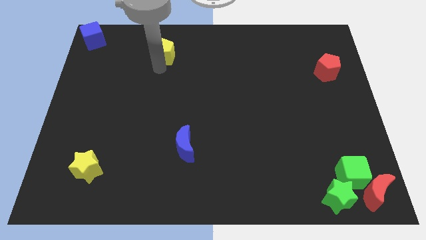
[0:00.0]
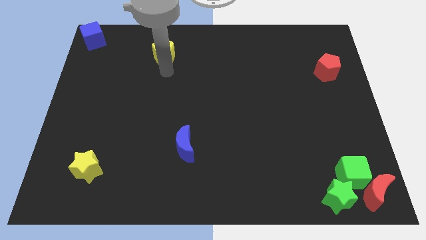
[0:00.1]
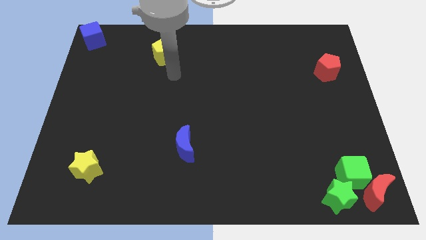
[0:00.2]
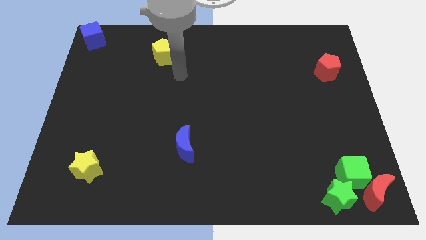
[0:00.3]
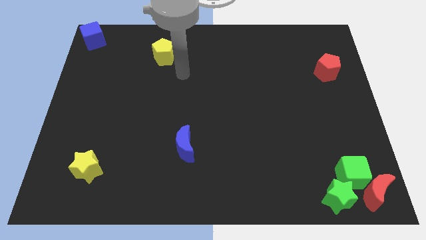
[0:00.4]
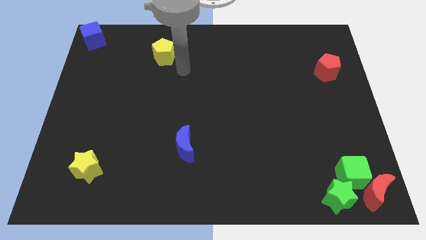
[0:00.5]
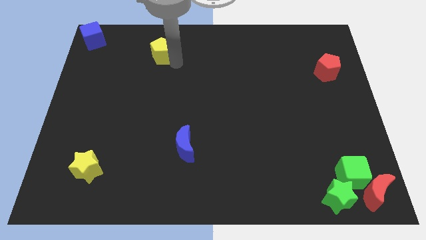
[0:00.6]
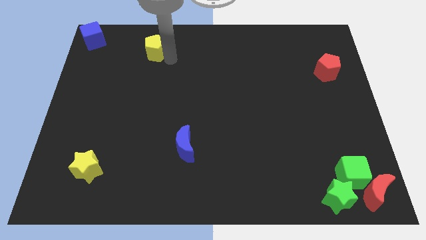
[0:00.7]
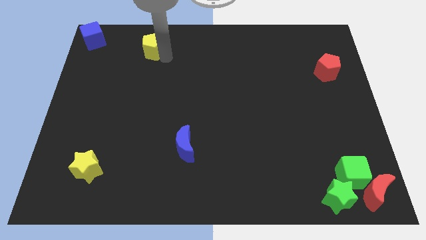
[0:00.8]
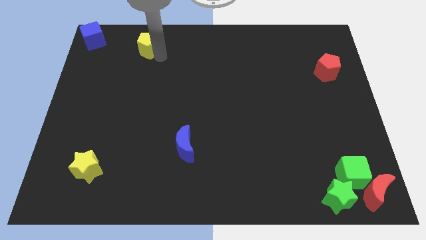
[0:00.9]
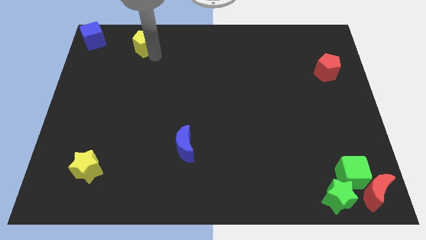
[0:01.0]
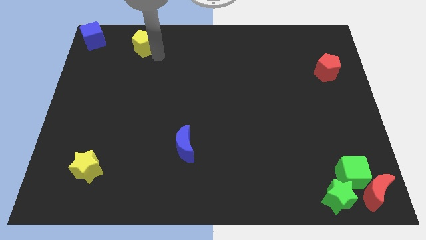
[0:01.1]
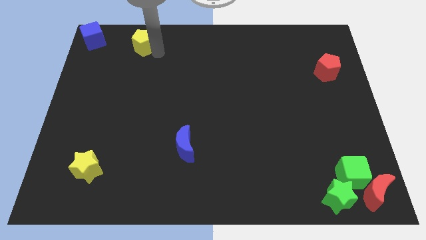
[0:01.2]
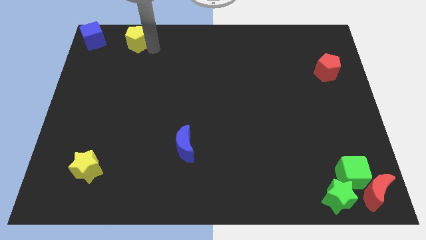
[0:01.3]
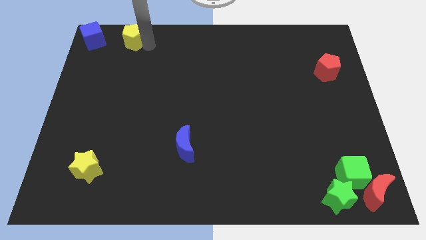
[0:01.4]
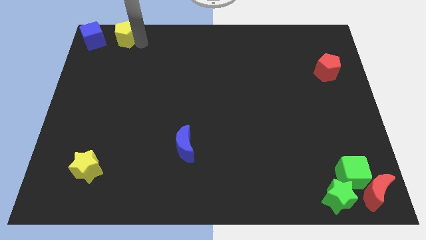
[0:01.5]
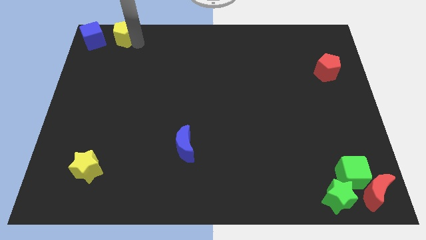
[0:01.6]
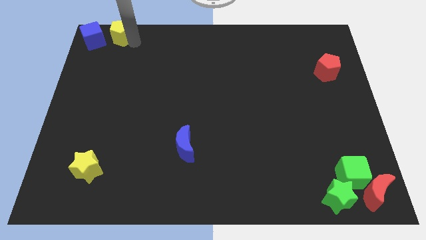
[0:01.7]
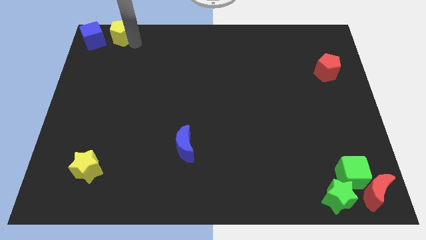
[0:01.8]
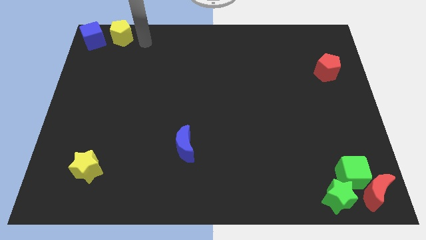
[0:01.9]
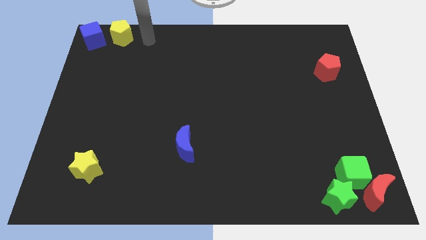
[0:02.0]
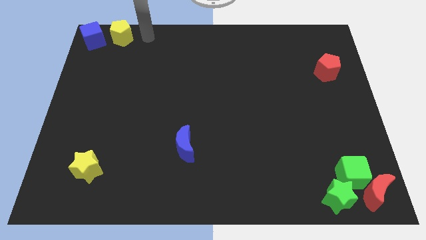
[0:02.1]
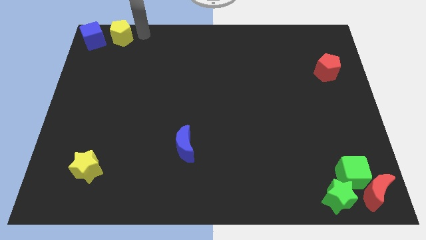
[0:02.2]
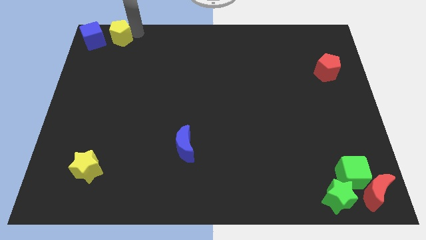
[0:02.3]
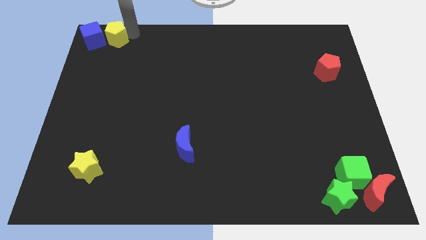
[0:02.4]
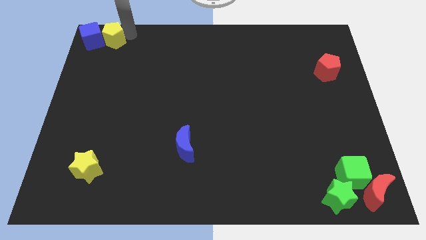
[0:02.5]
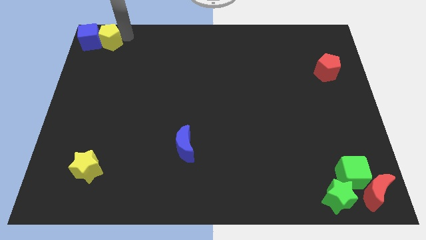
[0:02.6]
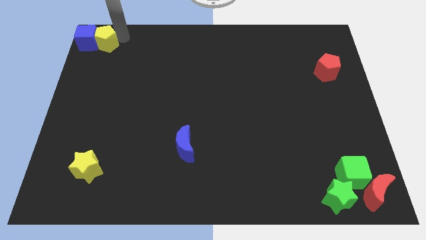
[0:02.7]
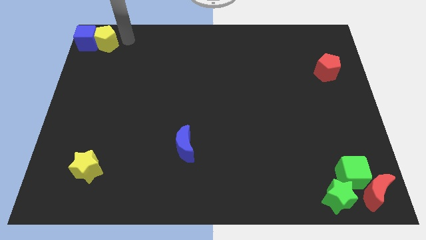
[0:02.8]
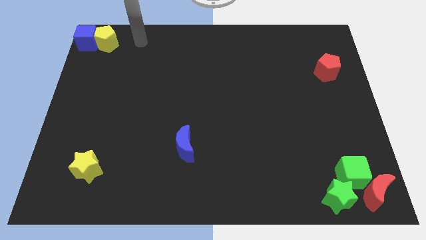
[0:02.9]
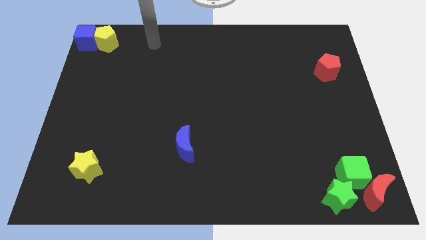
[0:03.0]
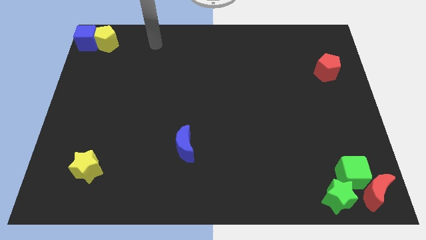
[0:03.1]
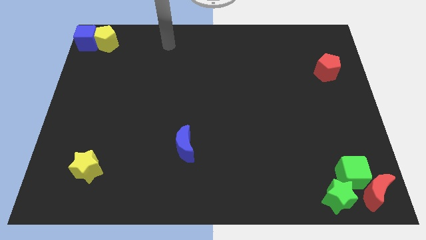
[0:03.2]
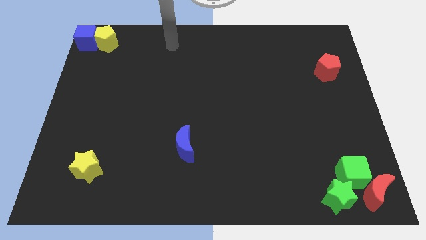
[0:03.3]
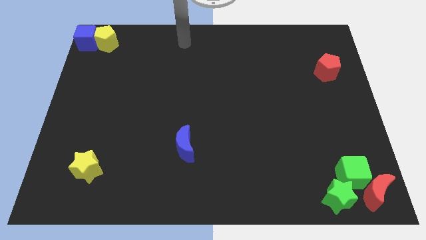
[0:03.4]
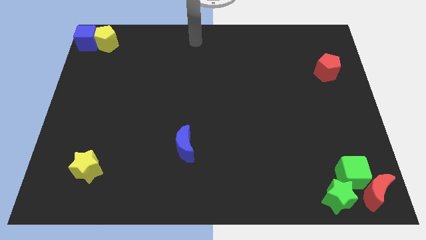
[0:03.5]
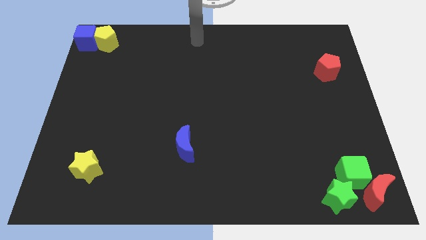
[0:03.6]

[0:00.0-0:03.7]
slide the yellow pentagon into the blue cube

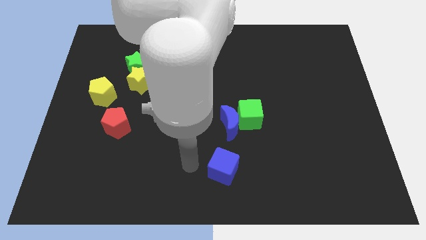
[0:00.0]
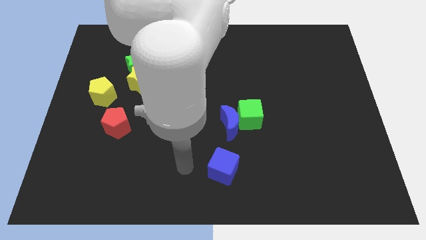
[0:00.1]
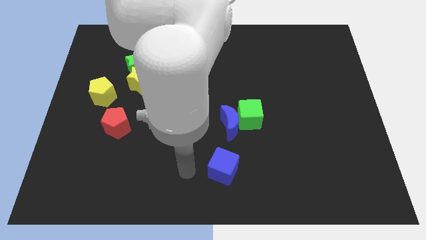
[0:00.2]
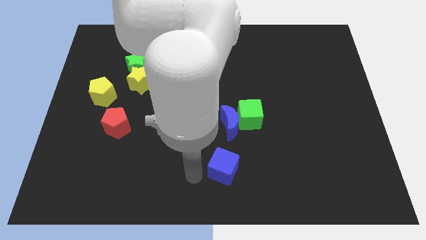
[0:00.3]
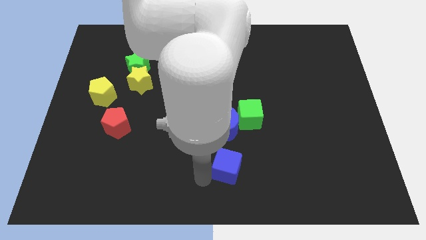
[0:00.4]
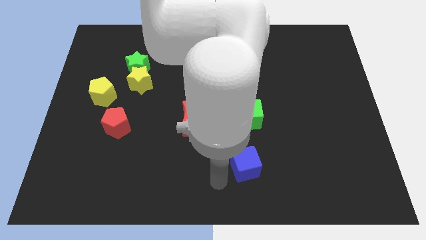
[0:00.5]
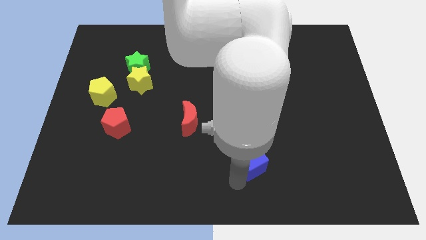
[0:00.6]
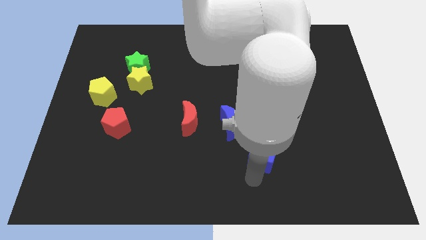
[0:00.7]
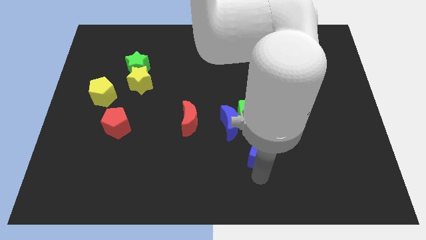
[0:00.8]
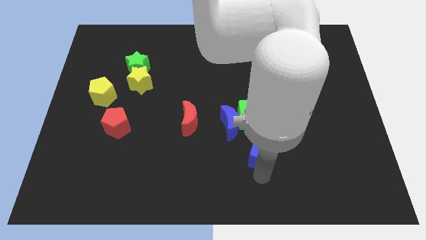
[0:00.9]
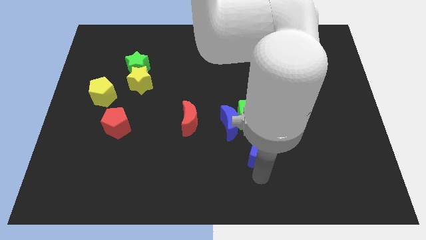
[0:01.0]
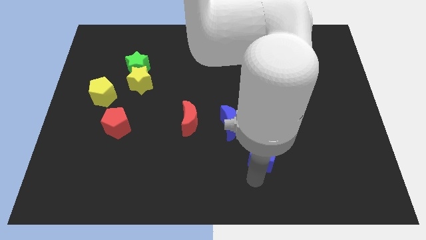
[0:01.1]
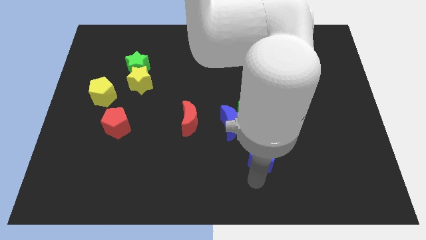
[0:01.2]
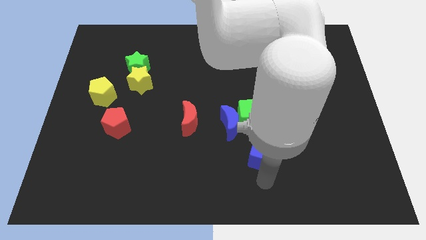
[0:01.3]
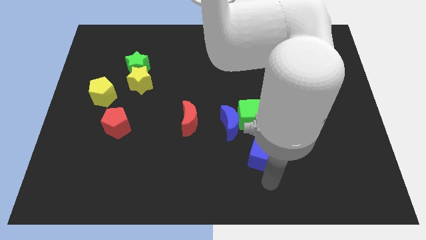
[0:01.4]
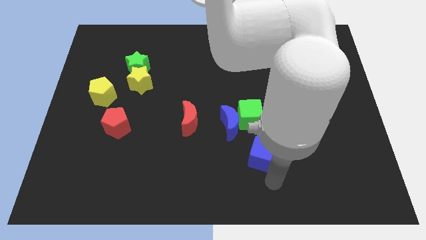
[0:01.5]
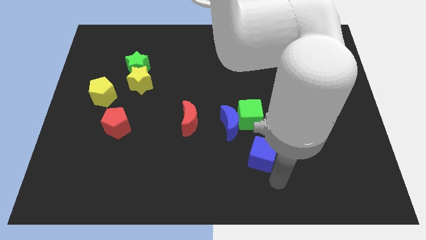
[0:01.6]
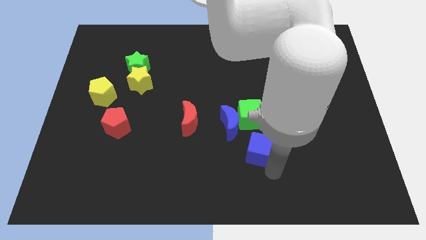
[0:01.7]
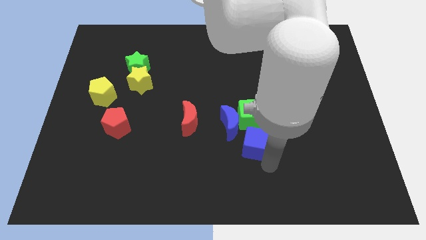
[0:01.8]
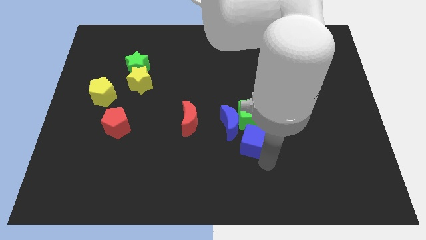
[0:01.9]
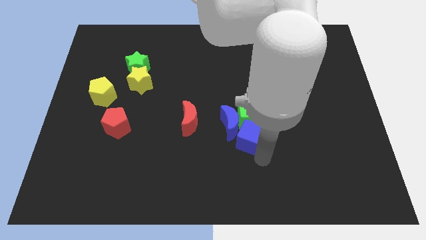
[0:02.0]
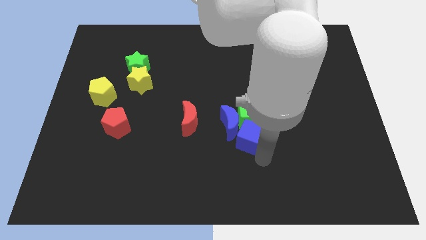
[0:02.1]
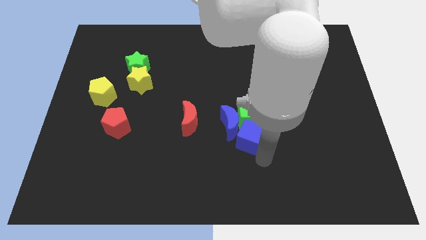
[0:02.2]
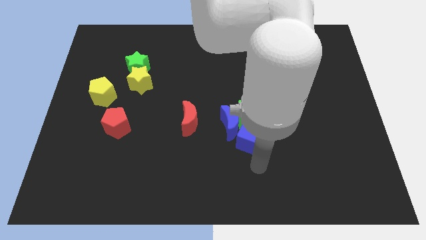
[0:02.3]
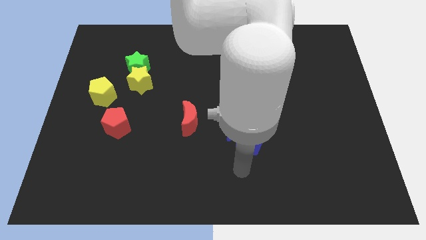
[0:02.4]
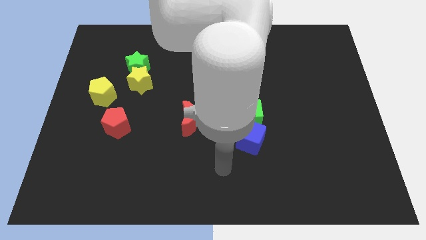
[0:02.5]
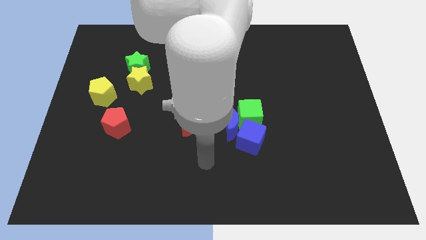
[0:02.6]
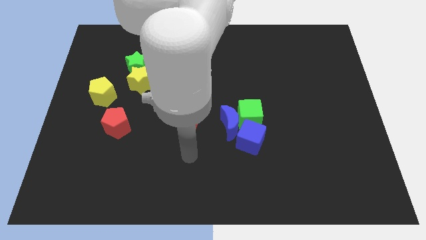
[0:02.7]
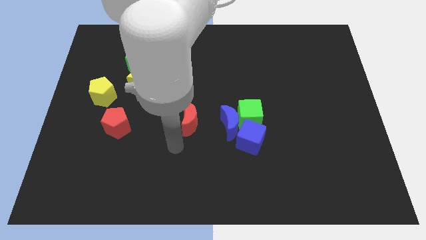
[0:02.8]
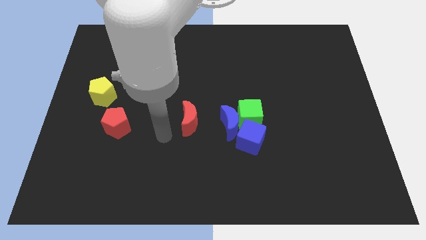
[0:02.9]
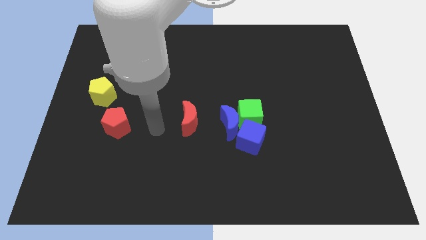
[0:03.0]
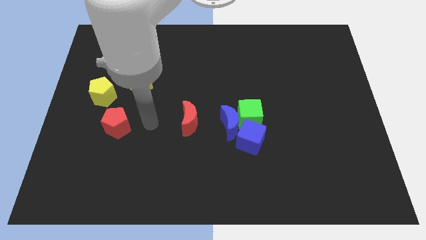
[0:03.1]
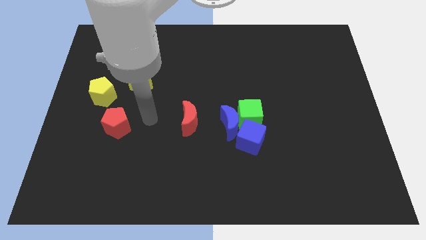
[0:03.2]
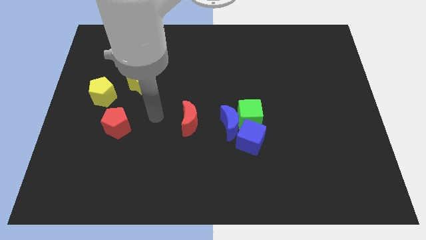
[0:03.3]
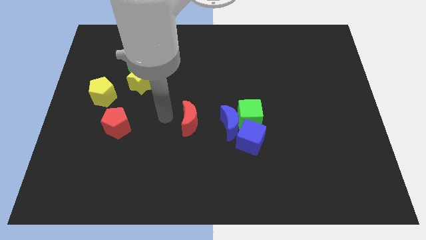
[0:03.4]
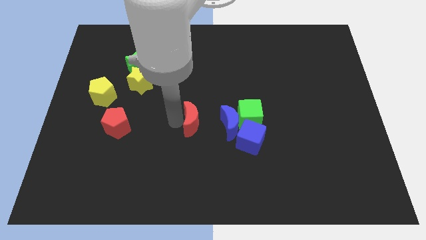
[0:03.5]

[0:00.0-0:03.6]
move the blue cube into the green cube

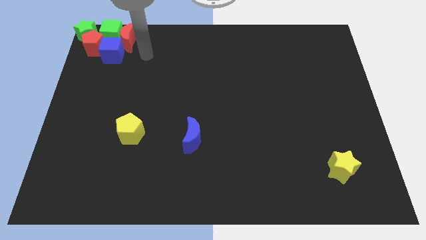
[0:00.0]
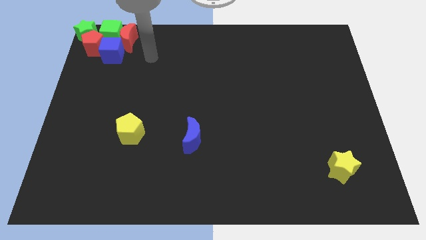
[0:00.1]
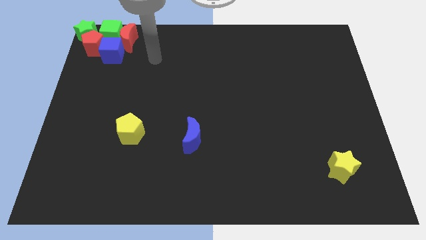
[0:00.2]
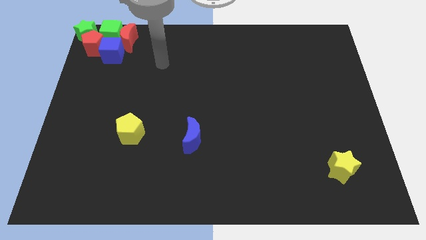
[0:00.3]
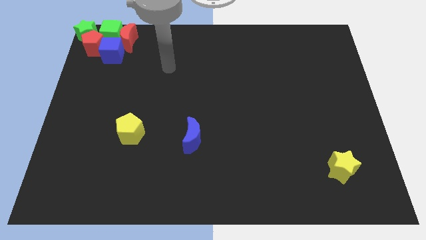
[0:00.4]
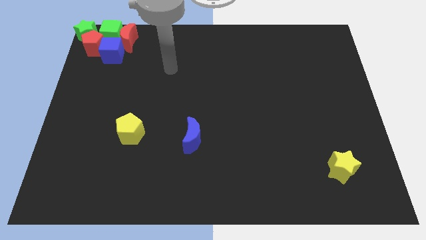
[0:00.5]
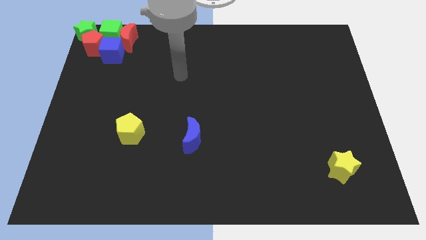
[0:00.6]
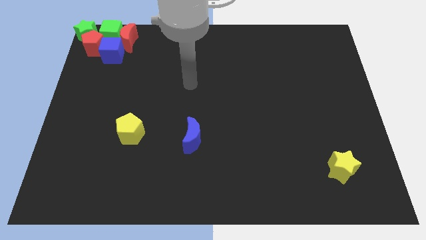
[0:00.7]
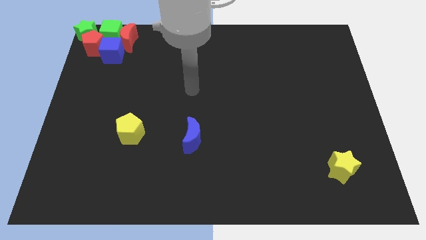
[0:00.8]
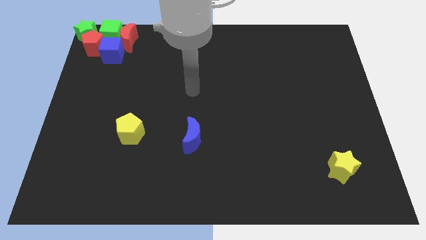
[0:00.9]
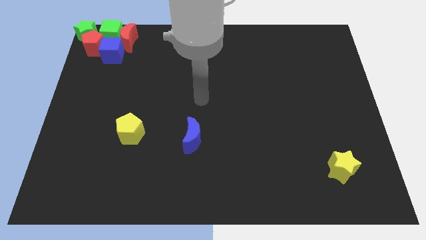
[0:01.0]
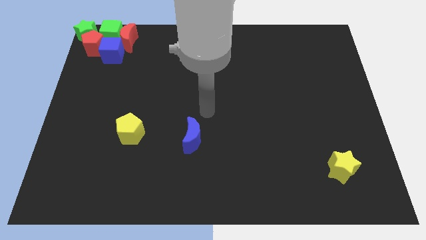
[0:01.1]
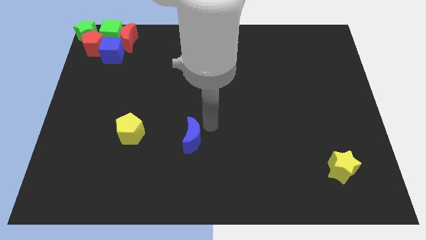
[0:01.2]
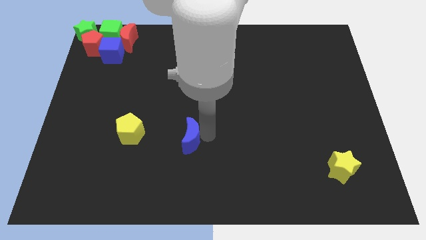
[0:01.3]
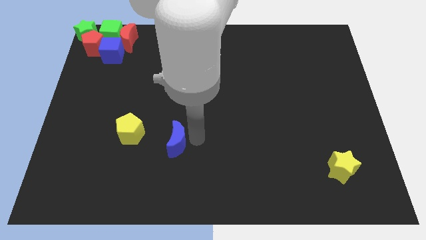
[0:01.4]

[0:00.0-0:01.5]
move your arm towards blue crescent
